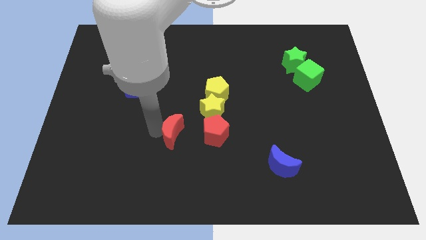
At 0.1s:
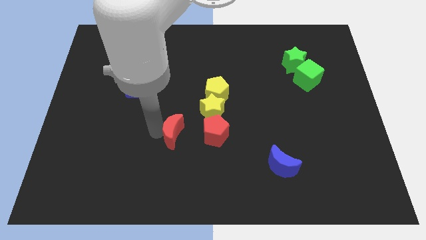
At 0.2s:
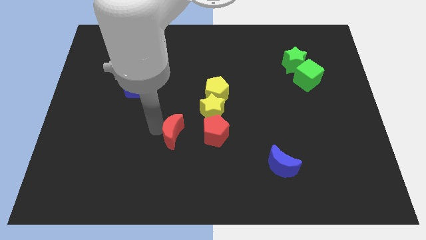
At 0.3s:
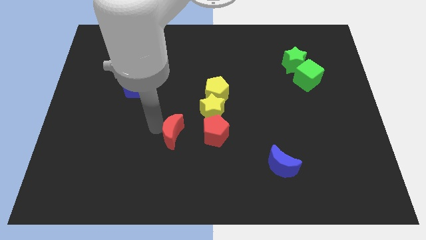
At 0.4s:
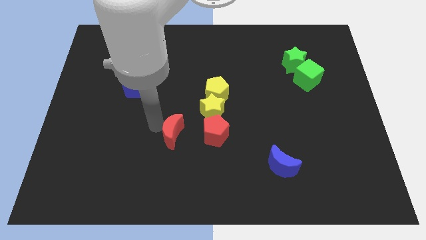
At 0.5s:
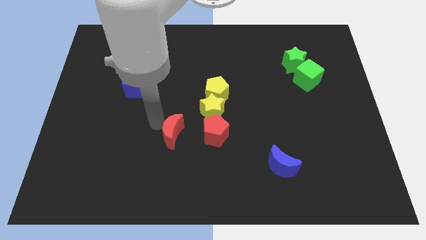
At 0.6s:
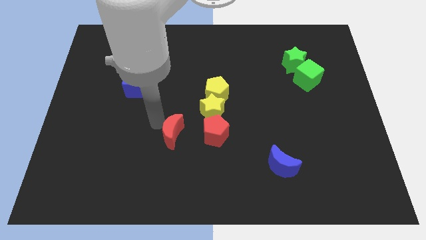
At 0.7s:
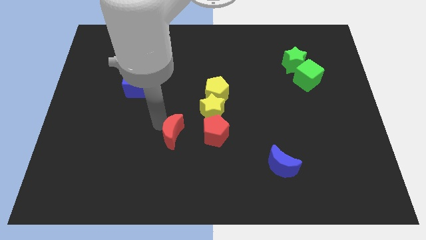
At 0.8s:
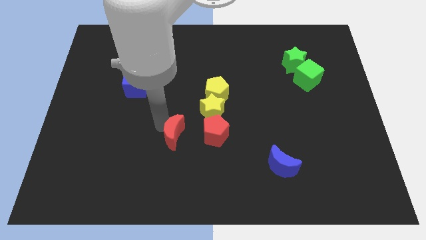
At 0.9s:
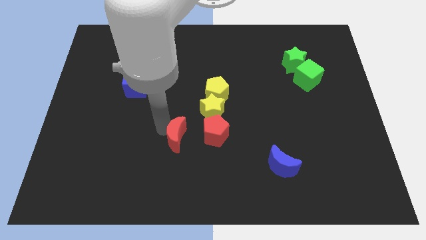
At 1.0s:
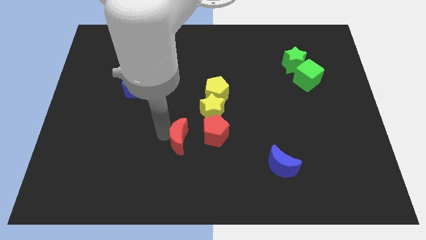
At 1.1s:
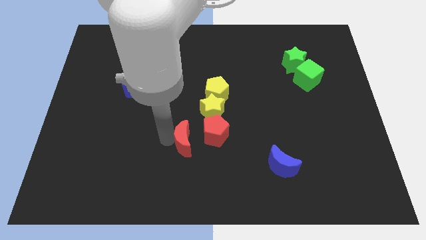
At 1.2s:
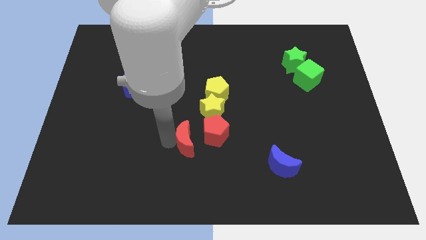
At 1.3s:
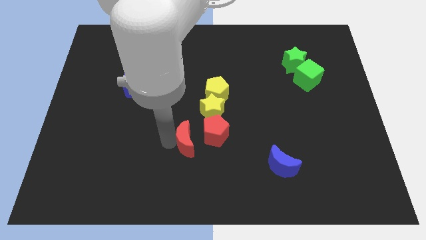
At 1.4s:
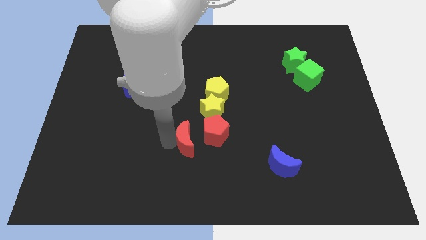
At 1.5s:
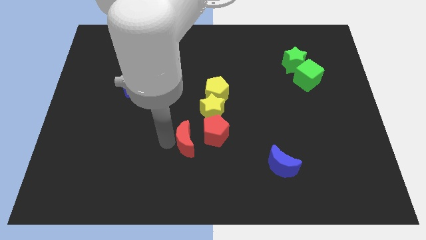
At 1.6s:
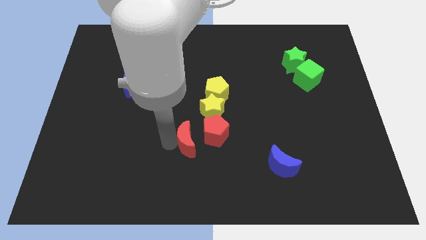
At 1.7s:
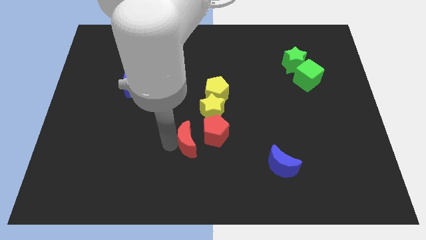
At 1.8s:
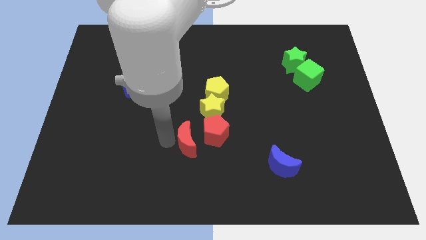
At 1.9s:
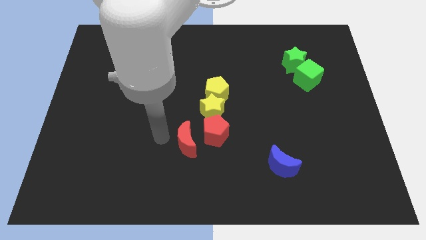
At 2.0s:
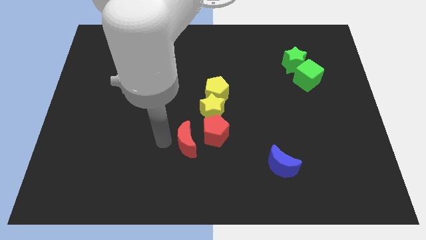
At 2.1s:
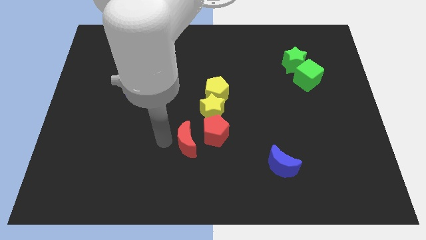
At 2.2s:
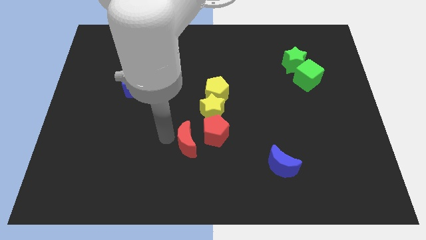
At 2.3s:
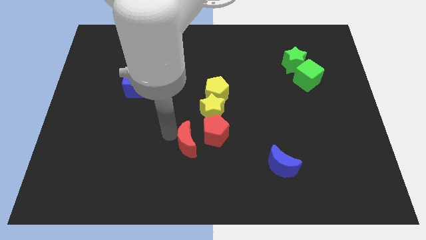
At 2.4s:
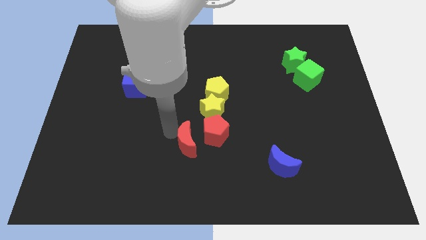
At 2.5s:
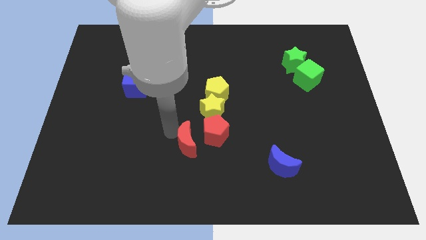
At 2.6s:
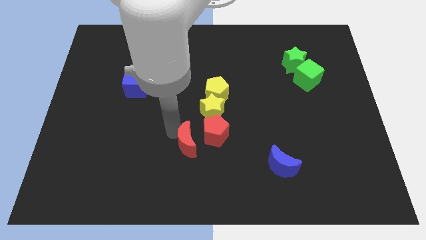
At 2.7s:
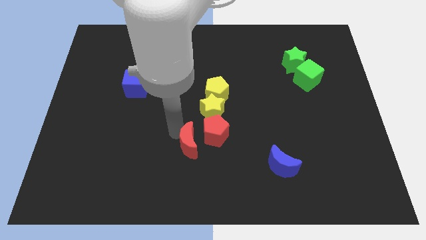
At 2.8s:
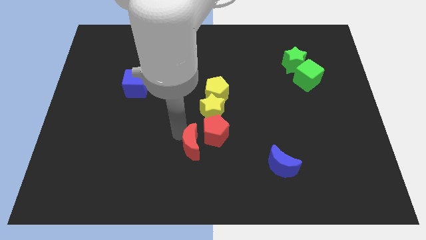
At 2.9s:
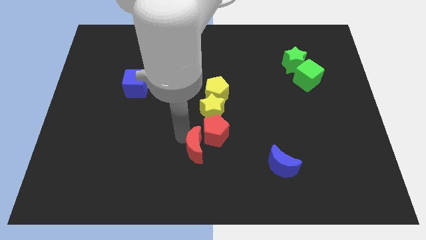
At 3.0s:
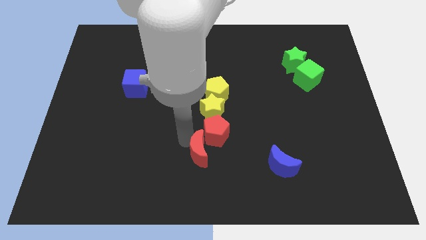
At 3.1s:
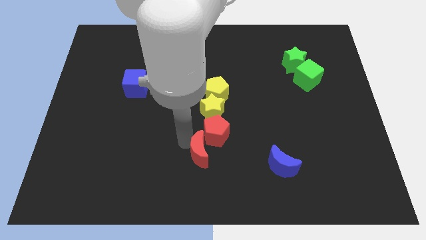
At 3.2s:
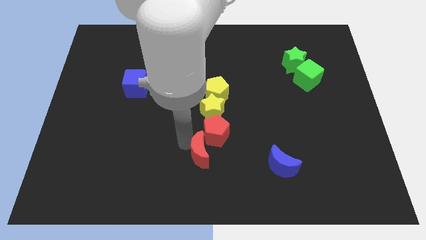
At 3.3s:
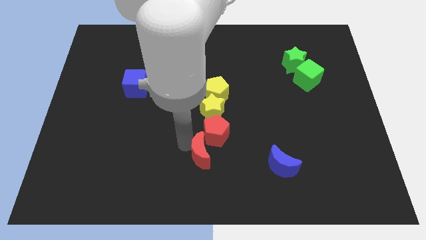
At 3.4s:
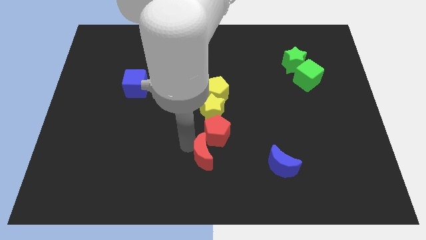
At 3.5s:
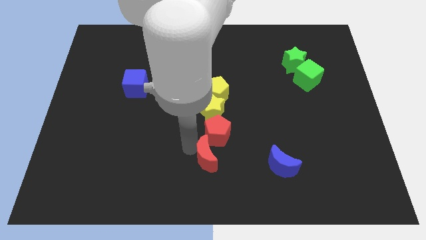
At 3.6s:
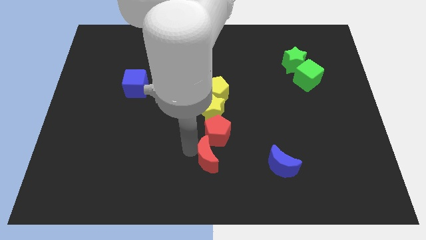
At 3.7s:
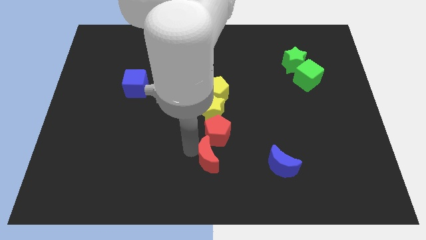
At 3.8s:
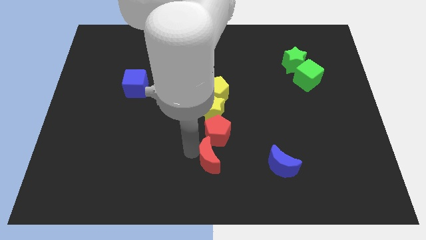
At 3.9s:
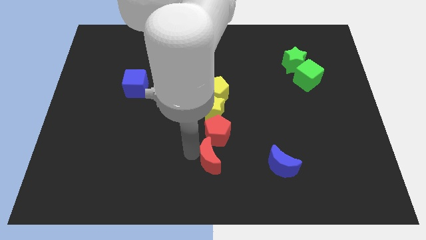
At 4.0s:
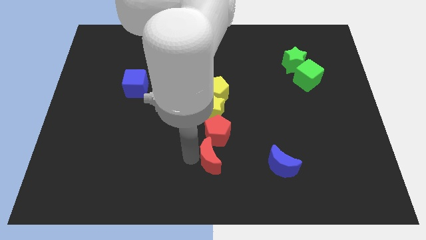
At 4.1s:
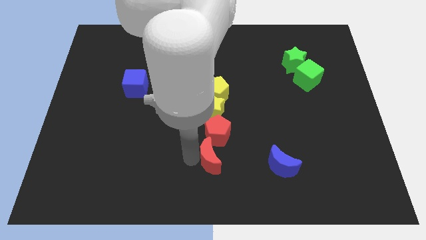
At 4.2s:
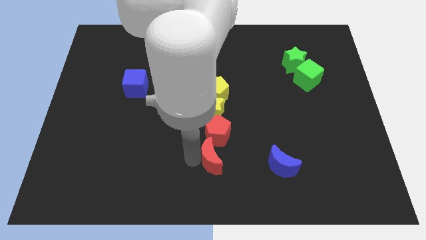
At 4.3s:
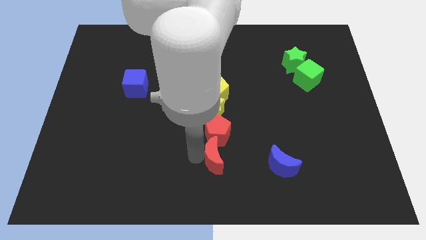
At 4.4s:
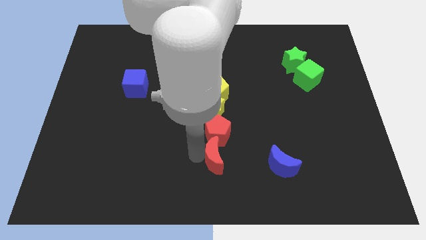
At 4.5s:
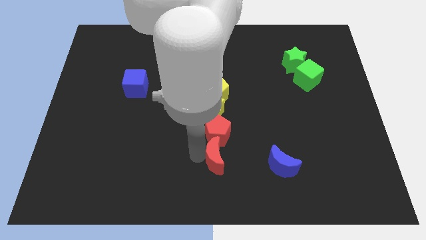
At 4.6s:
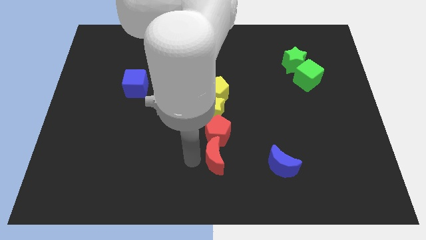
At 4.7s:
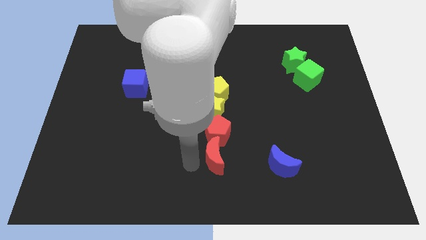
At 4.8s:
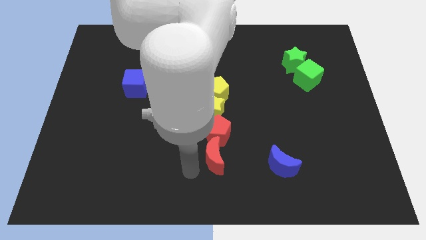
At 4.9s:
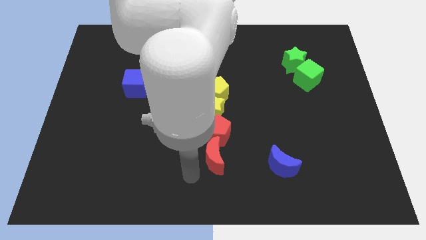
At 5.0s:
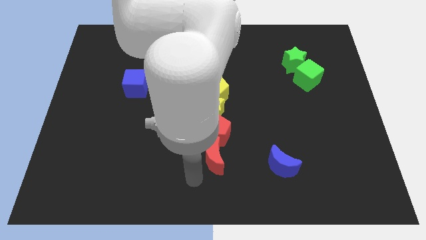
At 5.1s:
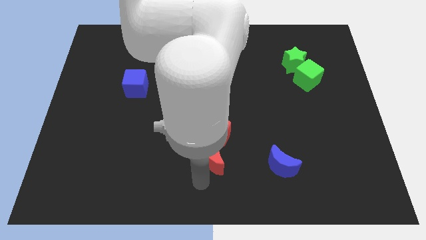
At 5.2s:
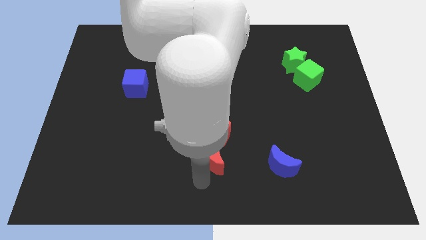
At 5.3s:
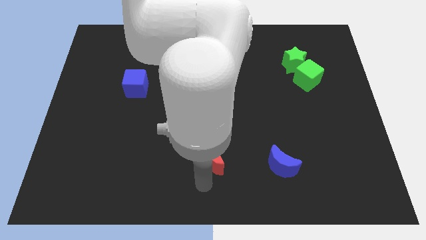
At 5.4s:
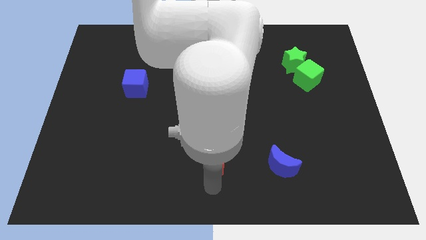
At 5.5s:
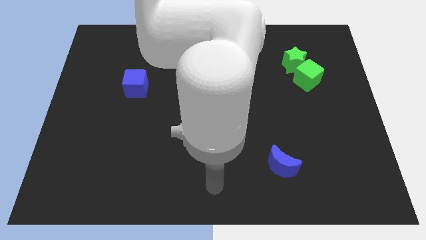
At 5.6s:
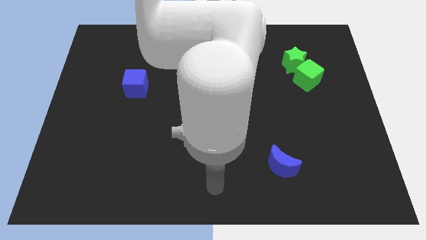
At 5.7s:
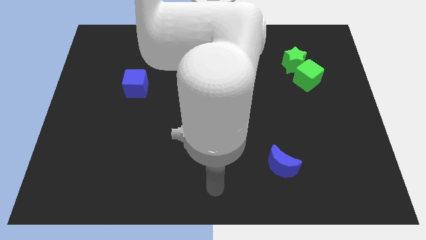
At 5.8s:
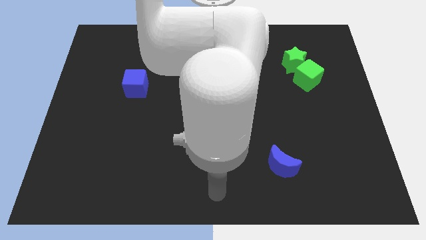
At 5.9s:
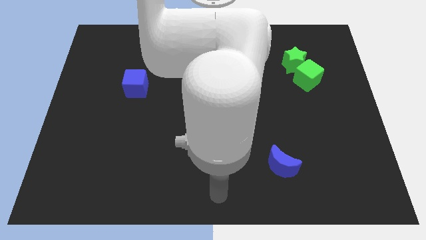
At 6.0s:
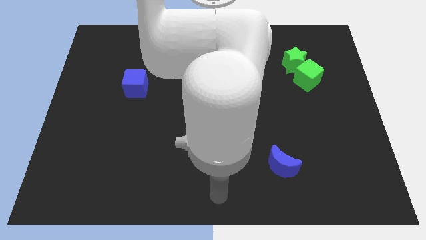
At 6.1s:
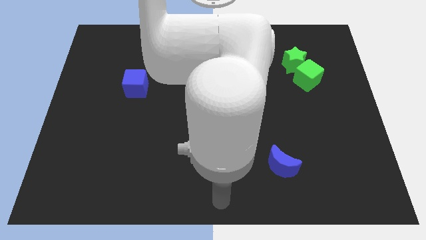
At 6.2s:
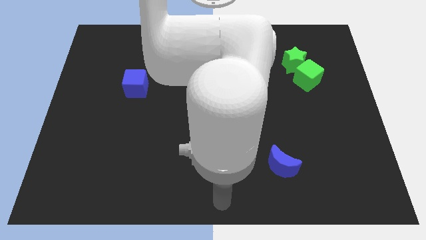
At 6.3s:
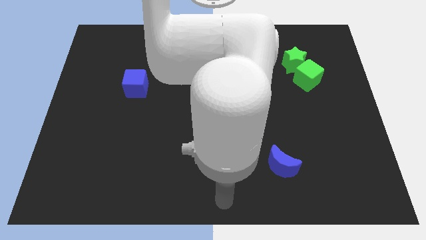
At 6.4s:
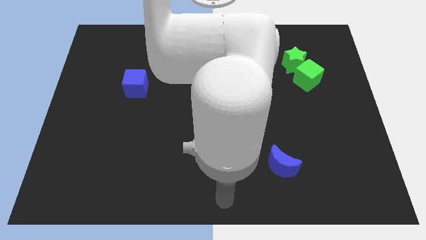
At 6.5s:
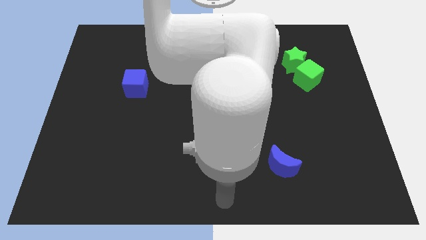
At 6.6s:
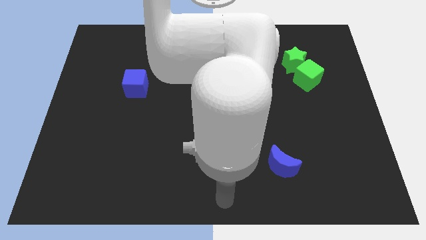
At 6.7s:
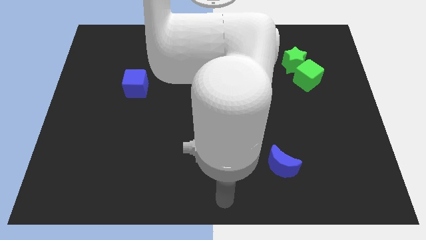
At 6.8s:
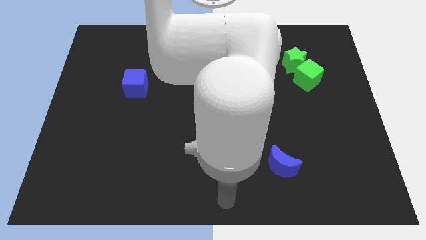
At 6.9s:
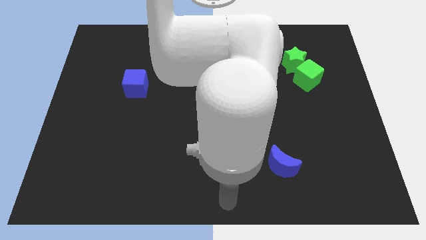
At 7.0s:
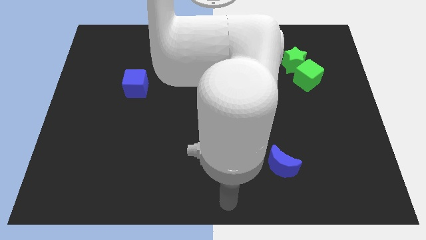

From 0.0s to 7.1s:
push the red crescent towards down the red pentagon

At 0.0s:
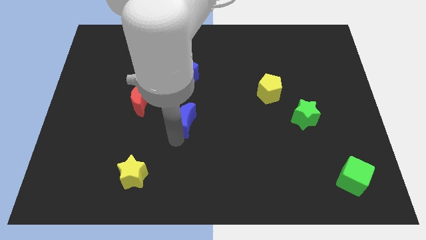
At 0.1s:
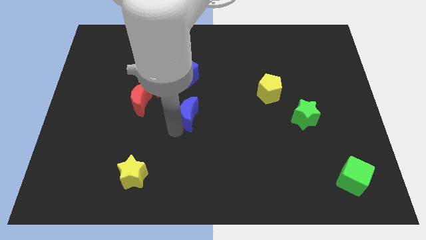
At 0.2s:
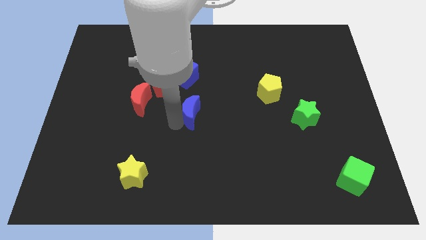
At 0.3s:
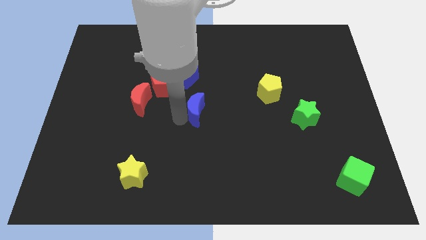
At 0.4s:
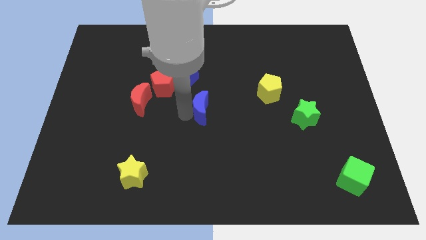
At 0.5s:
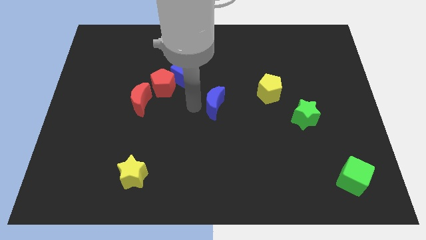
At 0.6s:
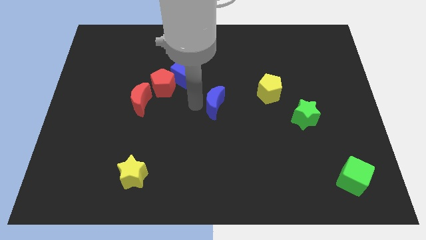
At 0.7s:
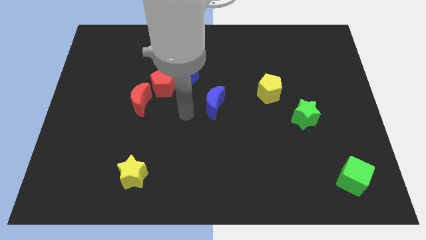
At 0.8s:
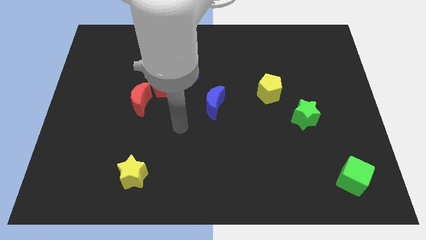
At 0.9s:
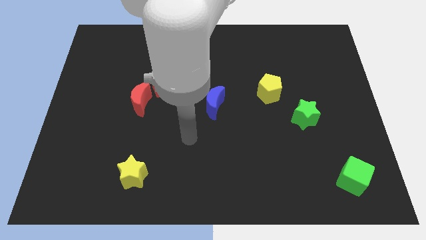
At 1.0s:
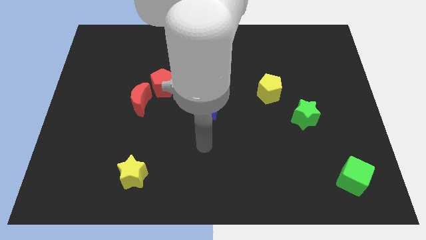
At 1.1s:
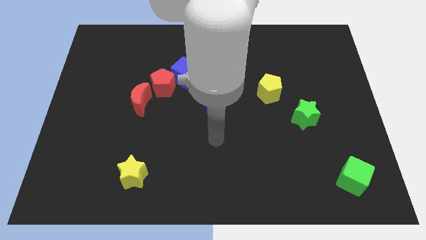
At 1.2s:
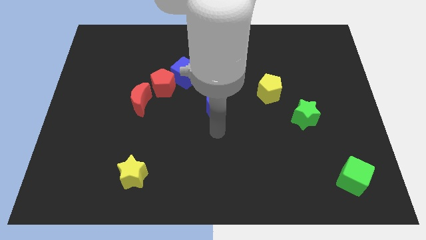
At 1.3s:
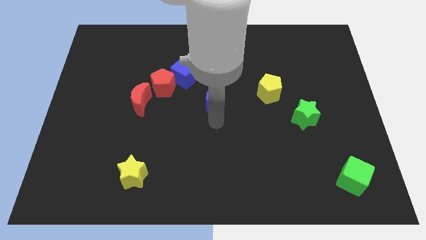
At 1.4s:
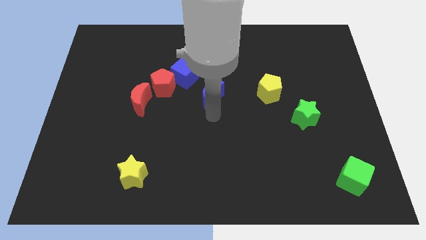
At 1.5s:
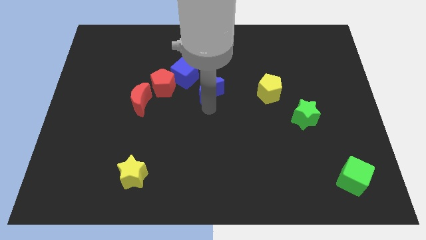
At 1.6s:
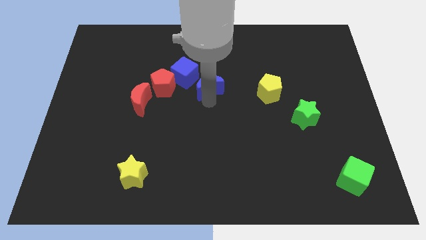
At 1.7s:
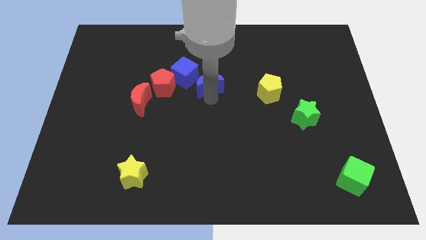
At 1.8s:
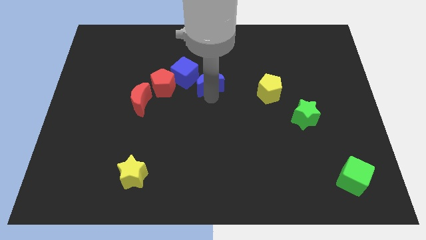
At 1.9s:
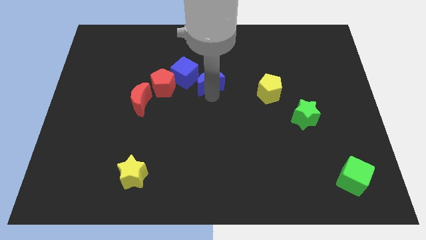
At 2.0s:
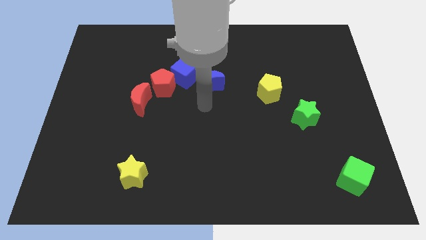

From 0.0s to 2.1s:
place the blue moon right to the blue cube
